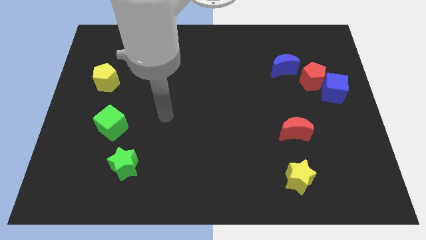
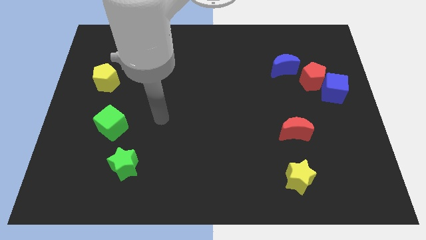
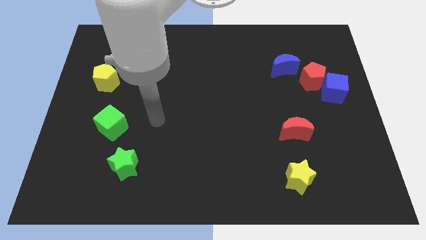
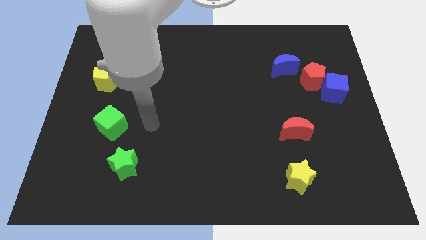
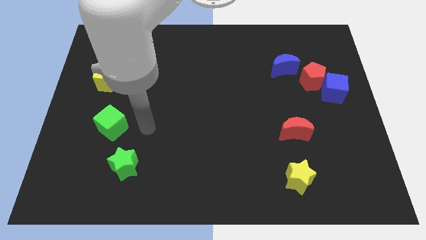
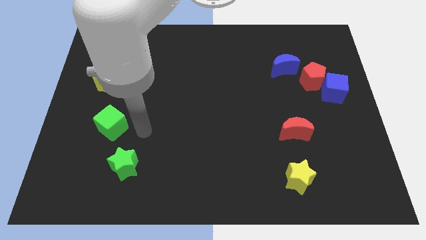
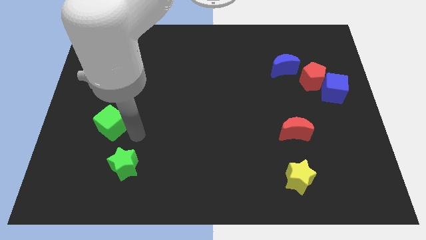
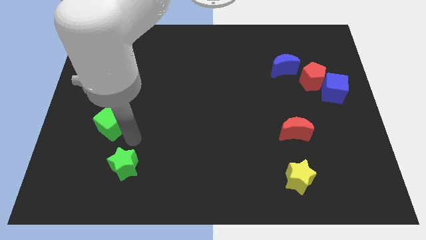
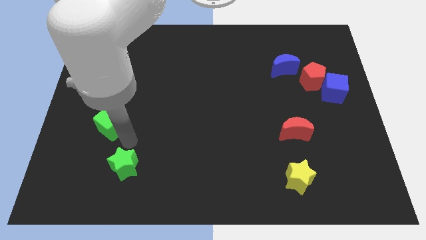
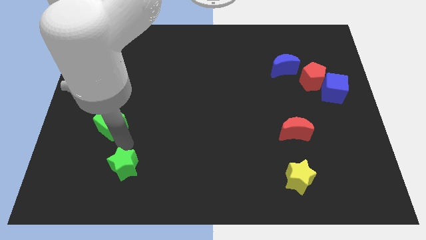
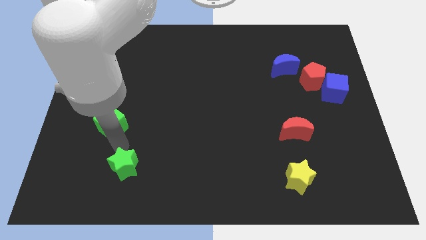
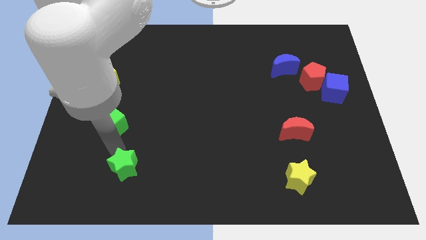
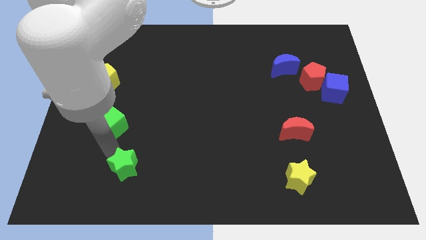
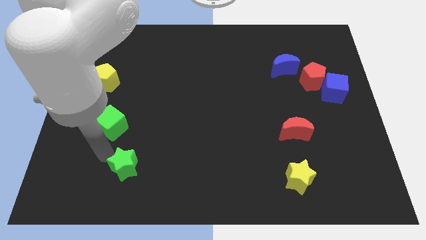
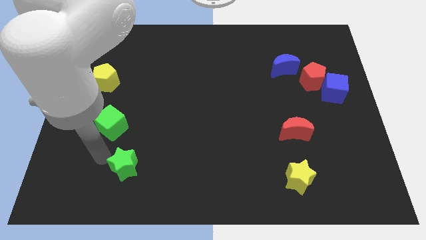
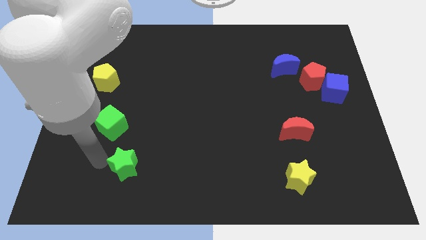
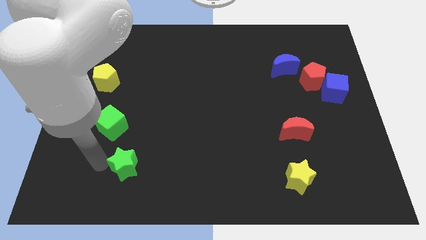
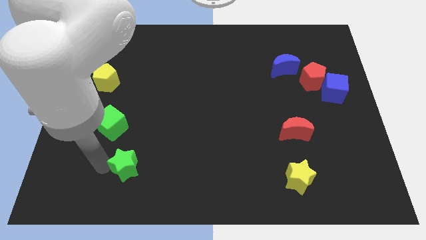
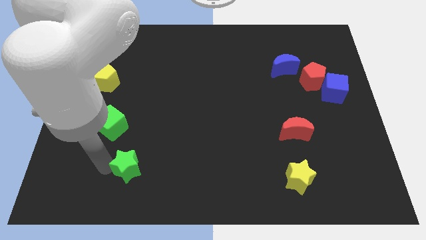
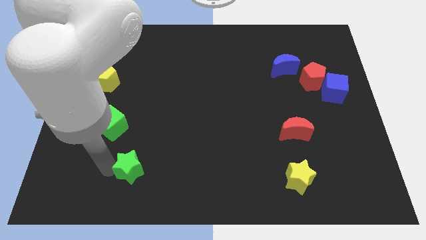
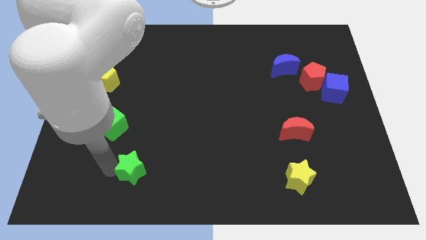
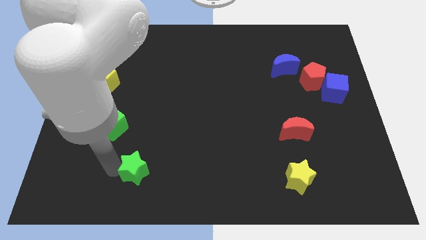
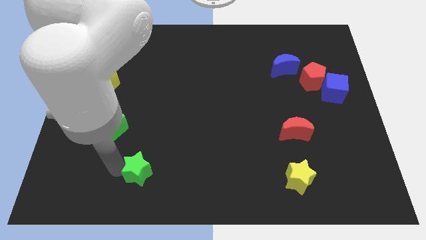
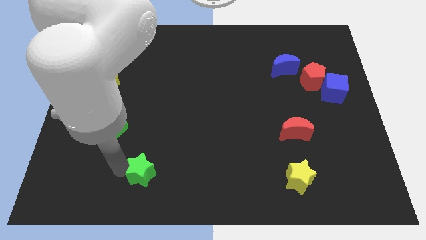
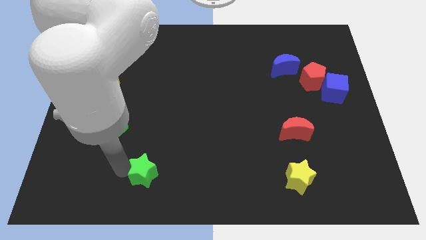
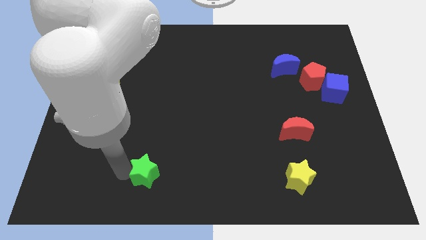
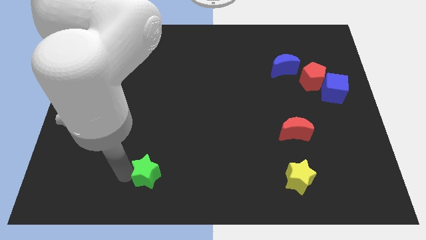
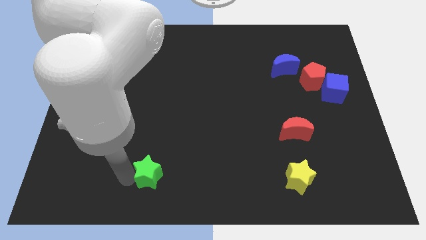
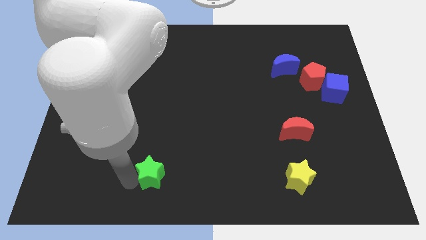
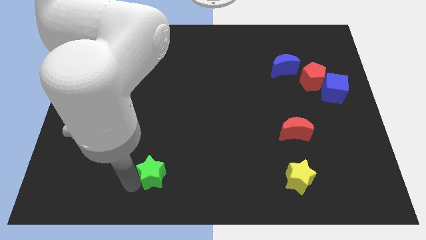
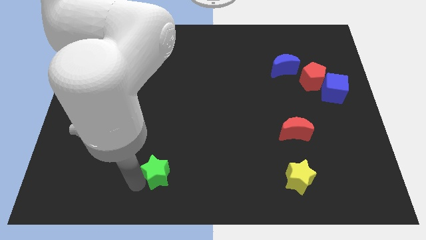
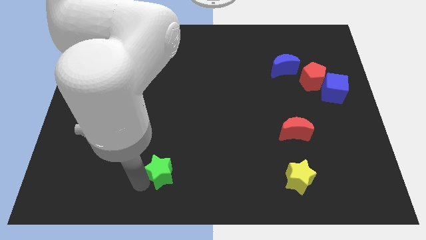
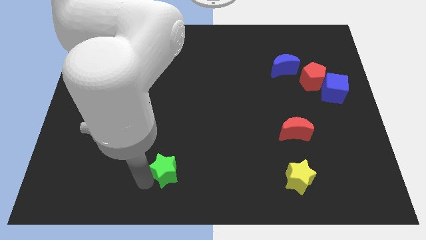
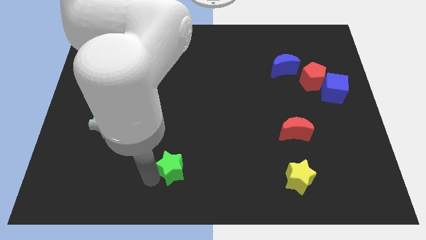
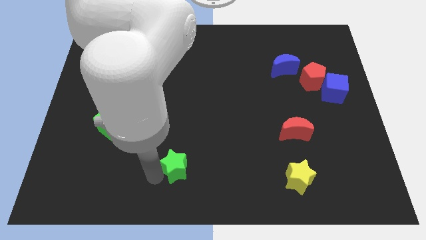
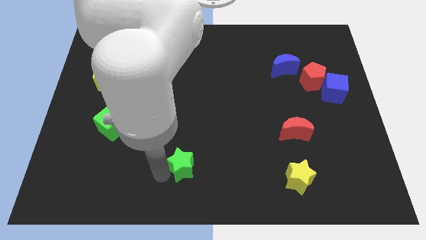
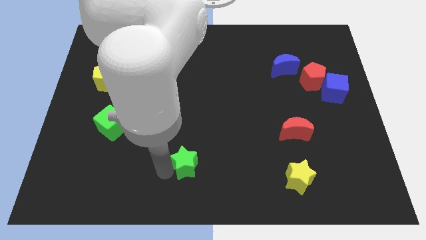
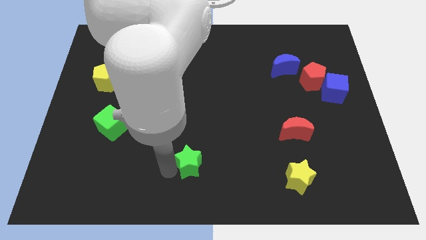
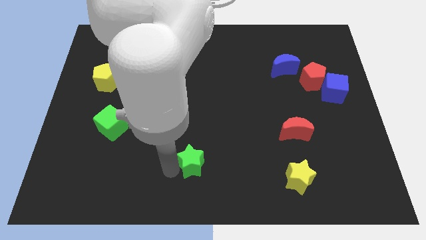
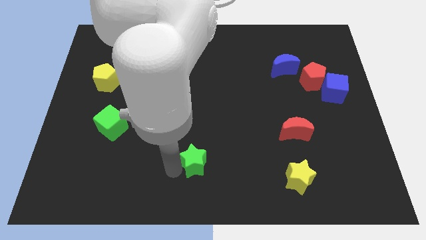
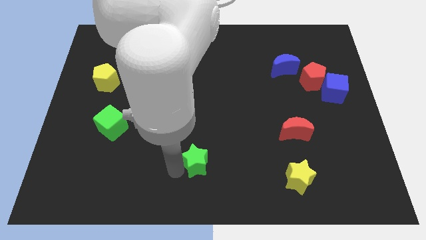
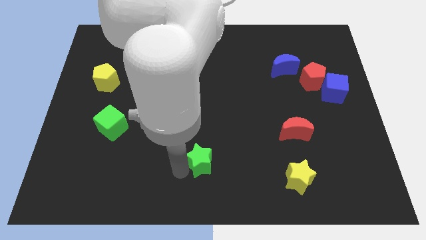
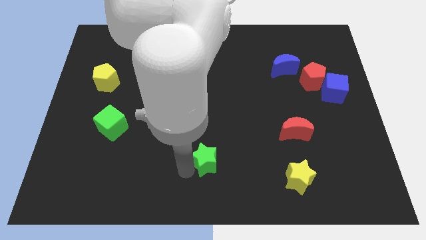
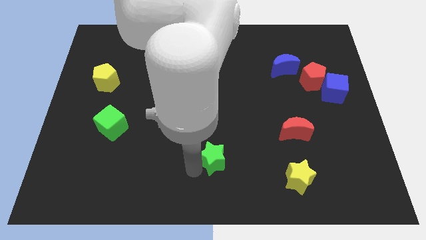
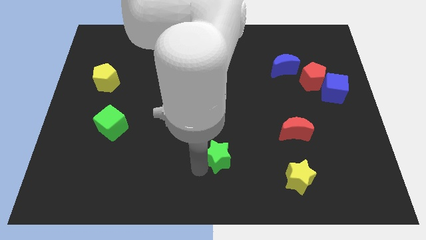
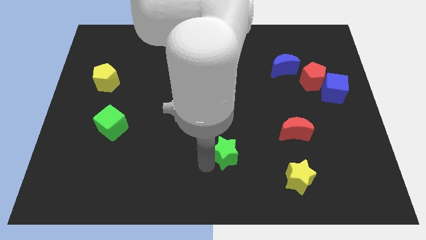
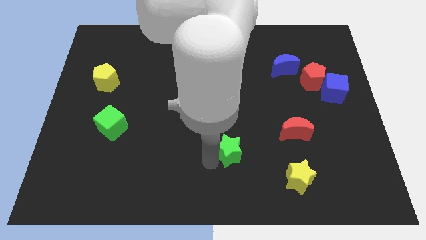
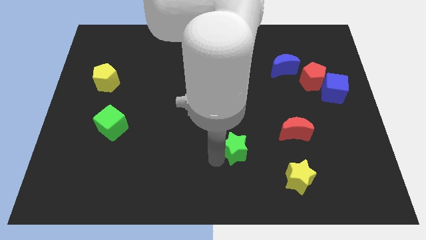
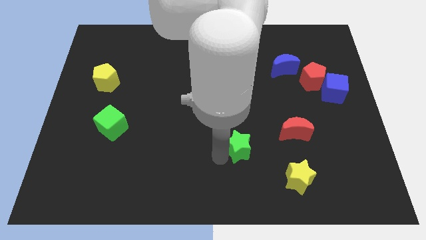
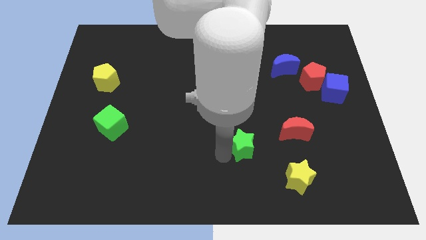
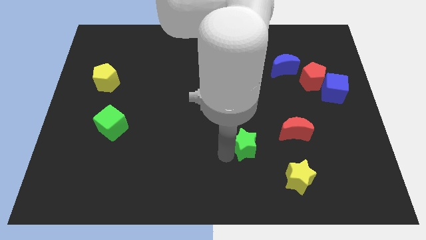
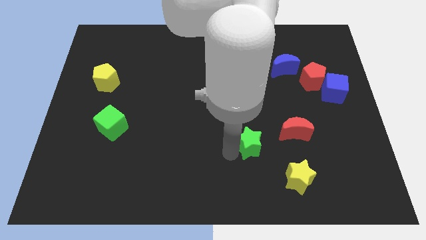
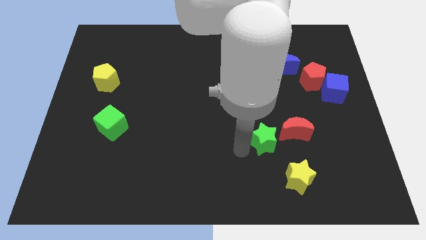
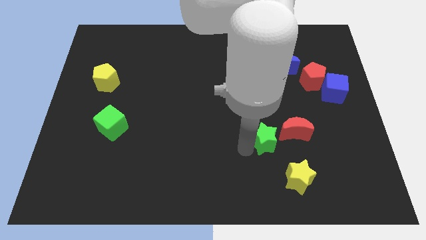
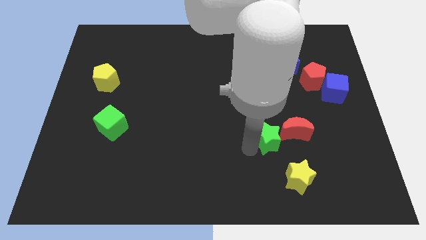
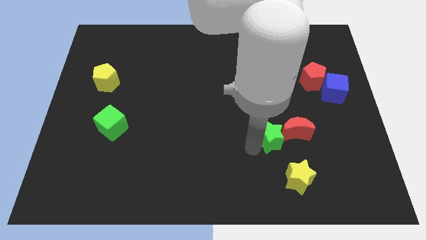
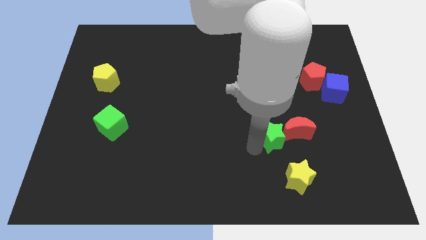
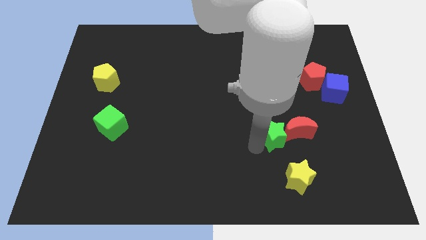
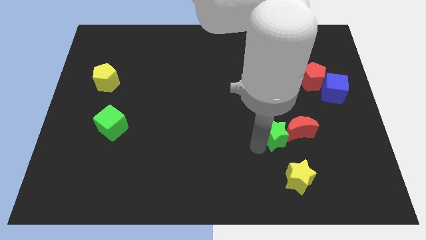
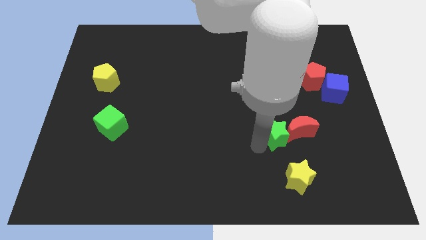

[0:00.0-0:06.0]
put the green star close to the red moon

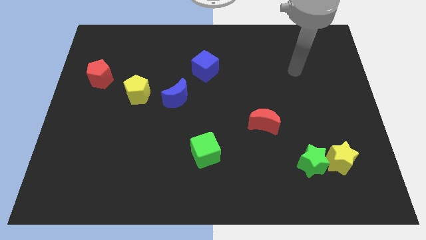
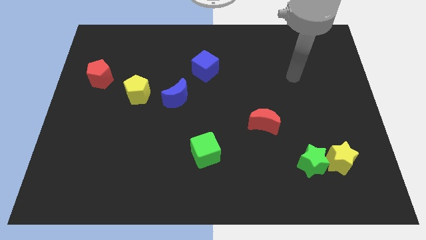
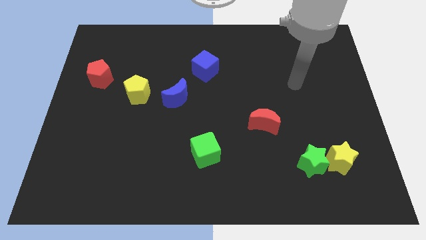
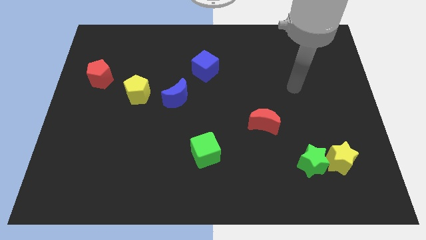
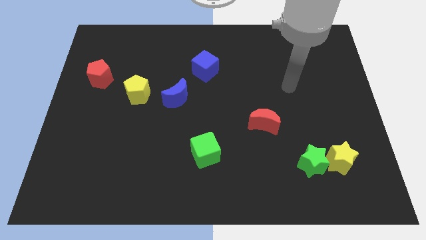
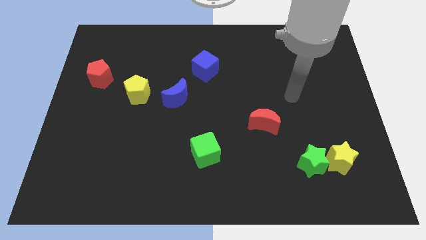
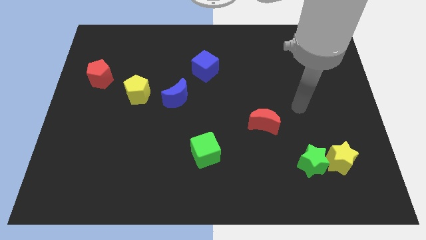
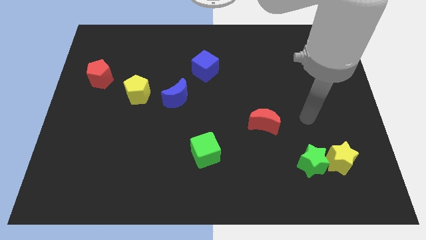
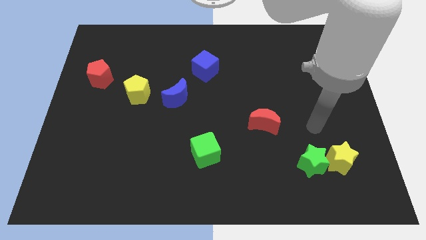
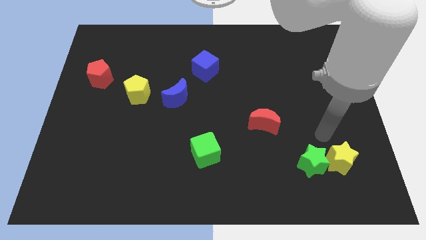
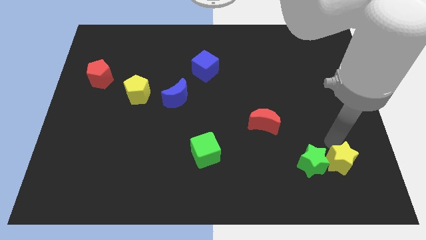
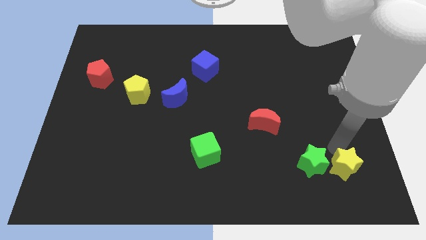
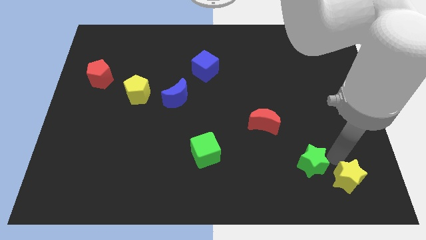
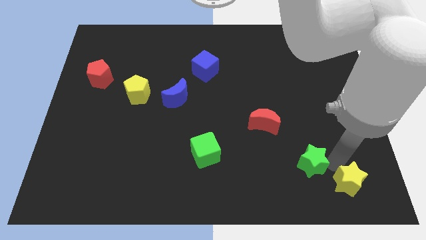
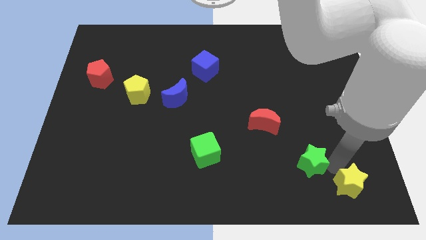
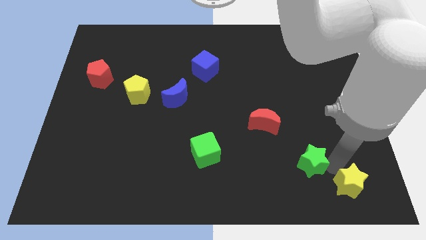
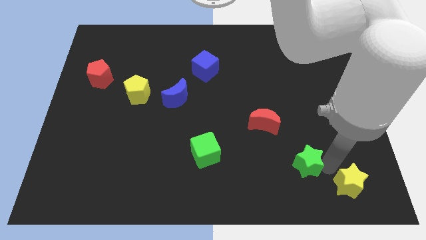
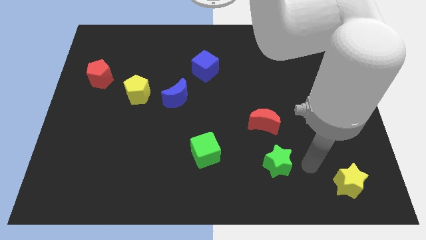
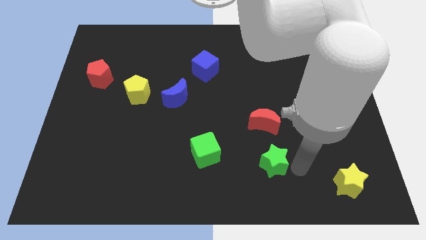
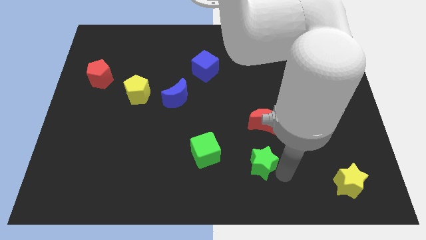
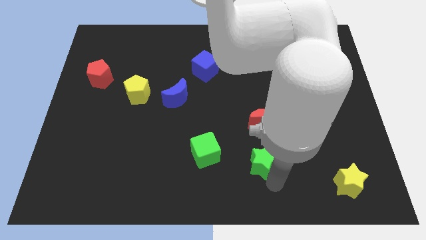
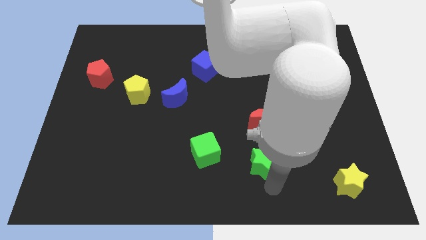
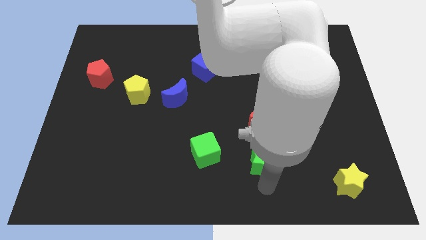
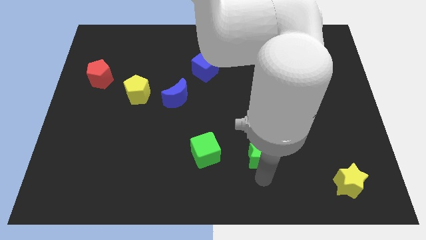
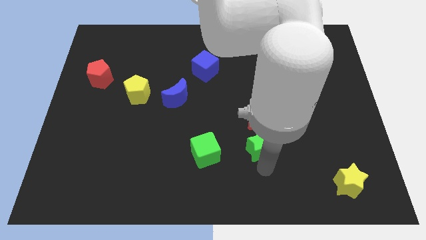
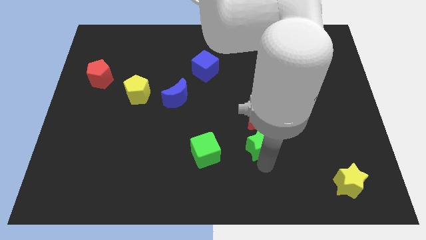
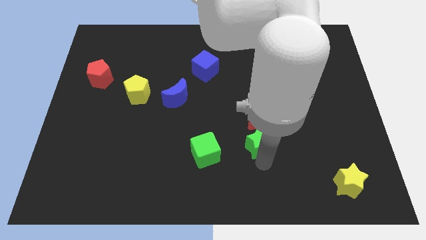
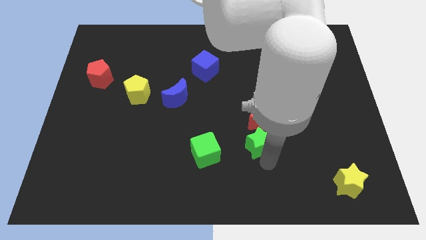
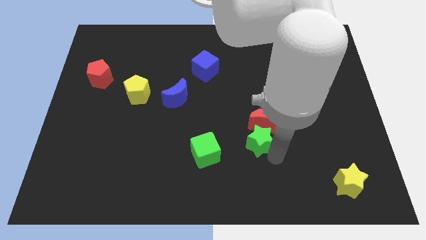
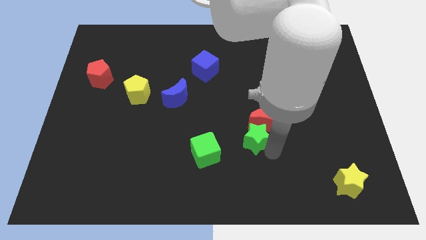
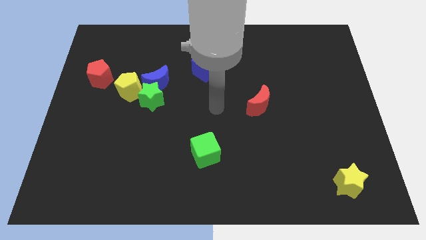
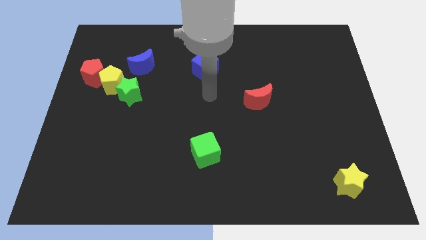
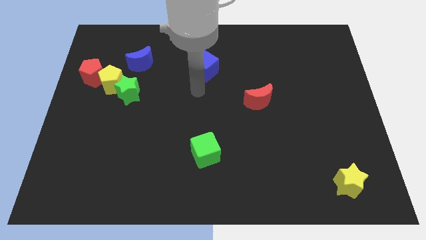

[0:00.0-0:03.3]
push the green star next to the yellow pentagon
